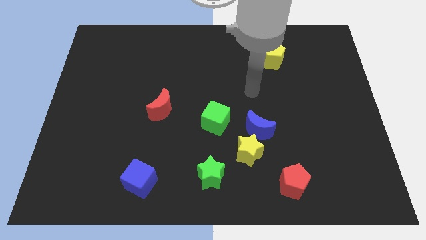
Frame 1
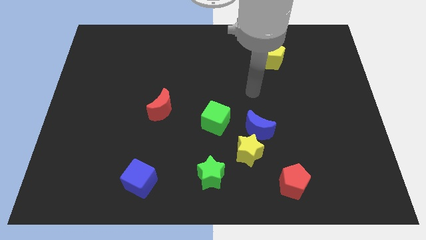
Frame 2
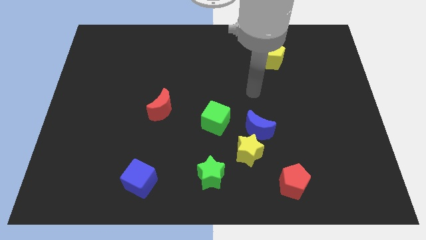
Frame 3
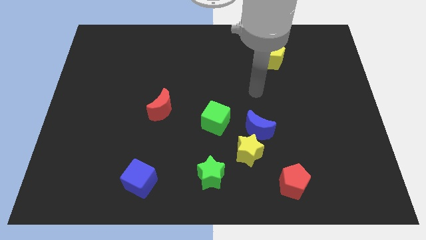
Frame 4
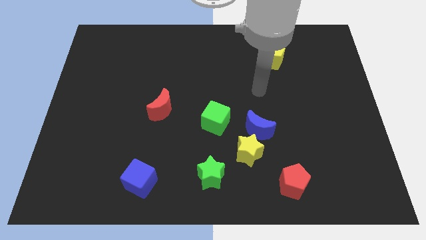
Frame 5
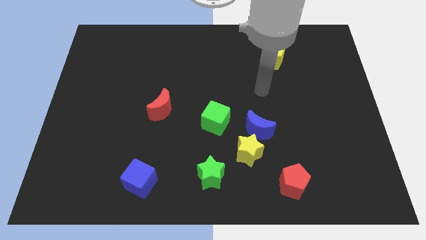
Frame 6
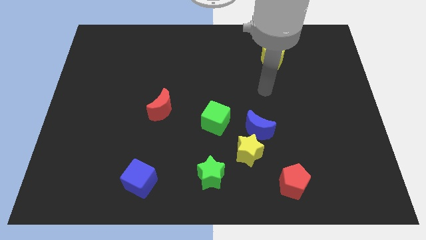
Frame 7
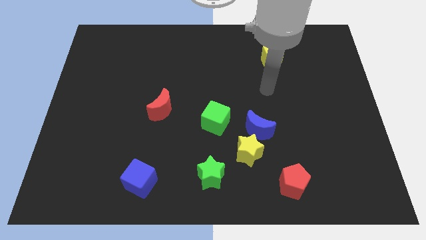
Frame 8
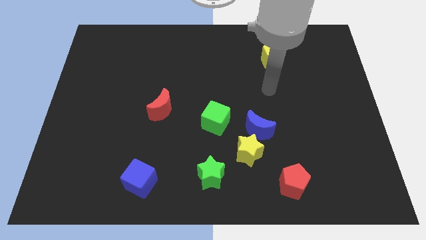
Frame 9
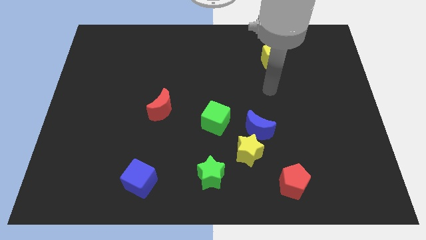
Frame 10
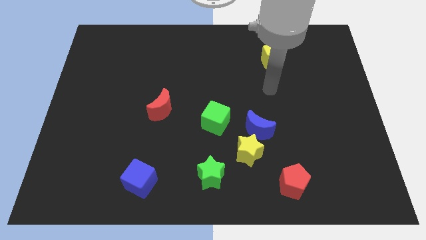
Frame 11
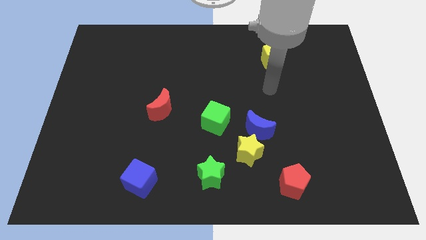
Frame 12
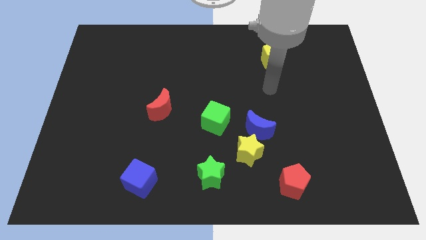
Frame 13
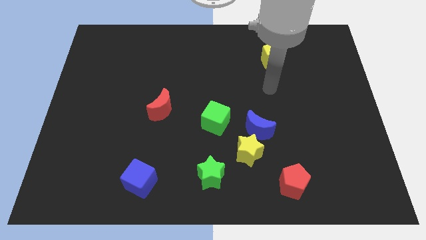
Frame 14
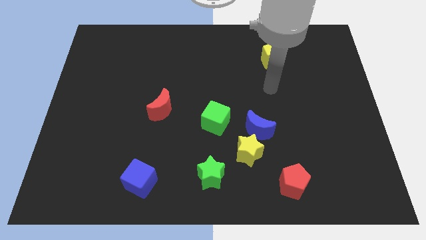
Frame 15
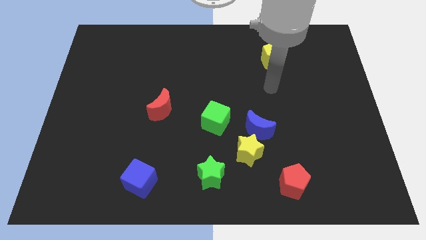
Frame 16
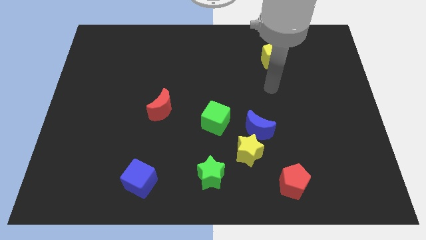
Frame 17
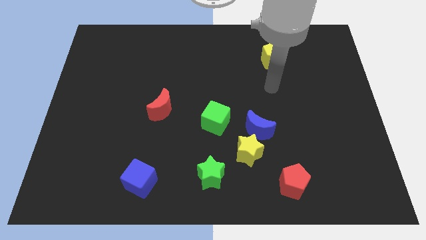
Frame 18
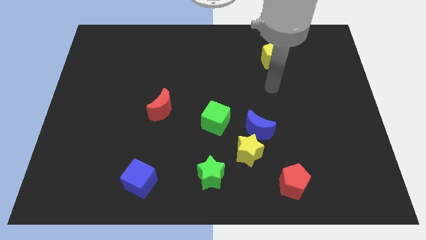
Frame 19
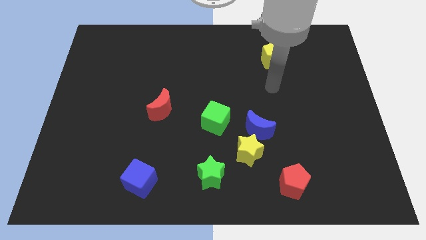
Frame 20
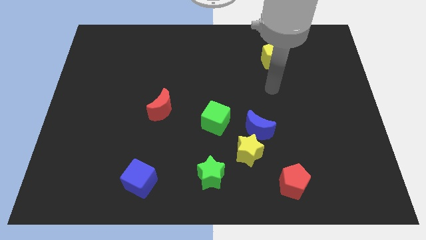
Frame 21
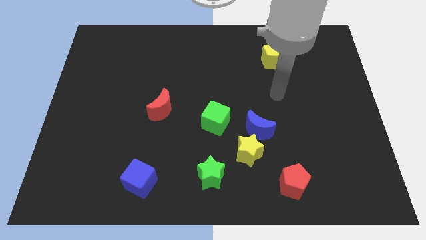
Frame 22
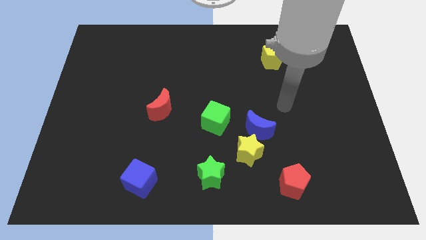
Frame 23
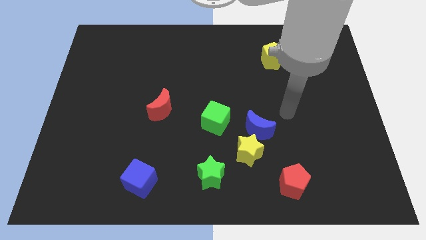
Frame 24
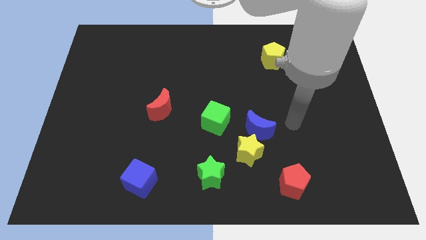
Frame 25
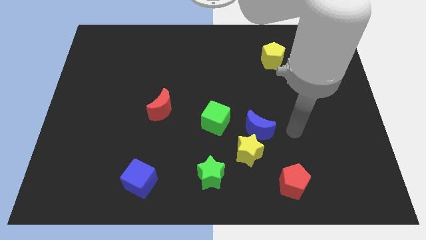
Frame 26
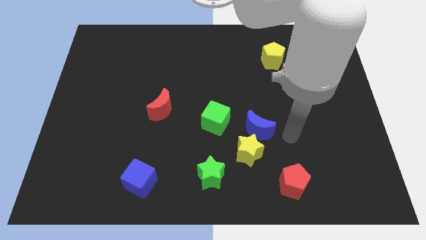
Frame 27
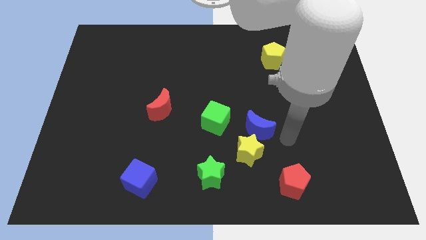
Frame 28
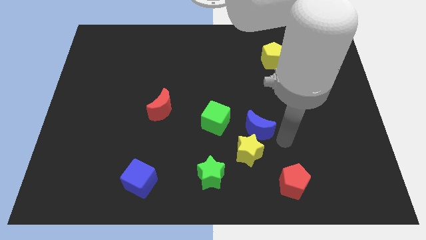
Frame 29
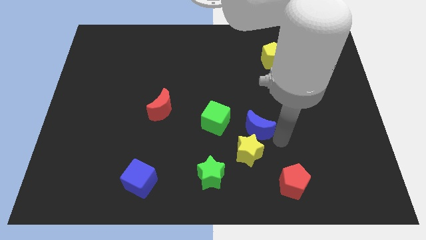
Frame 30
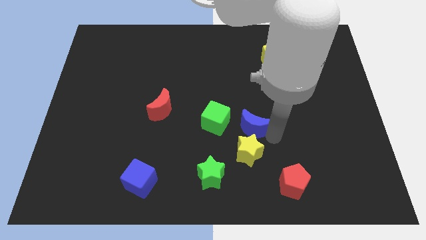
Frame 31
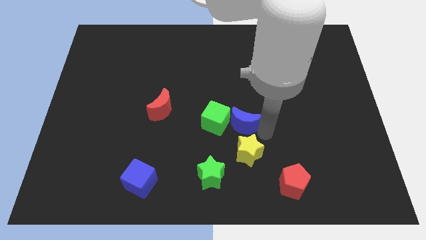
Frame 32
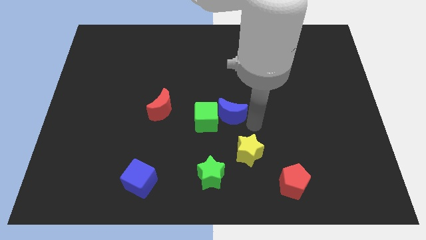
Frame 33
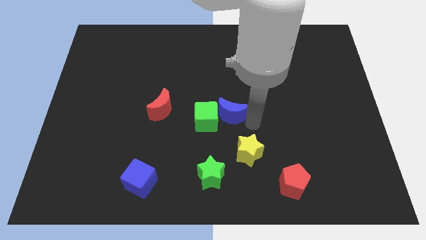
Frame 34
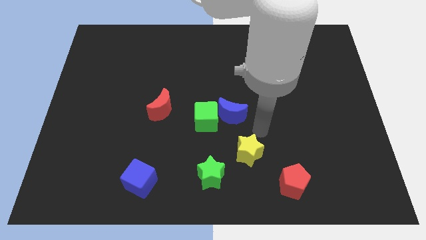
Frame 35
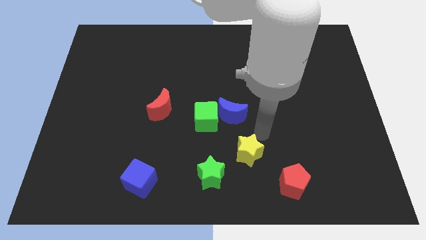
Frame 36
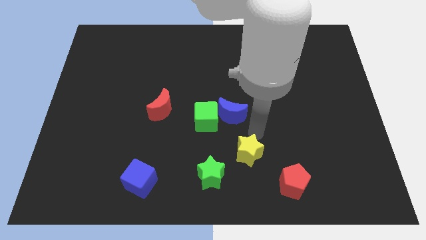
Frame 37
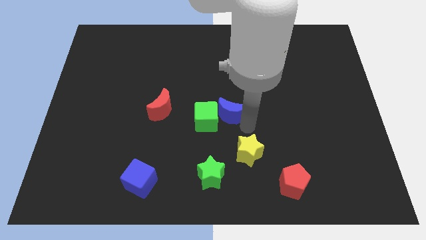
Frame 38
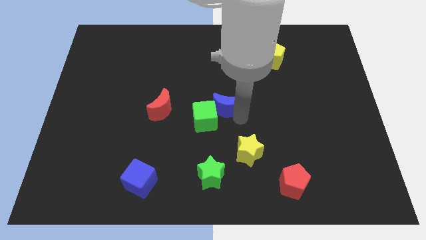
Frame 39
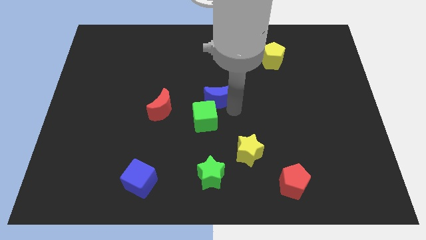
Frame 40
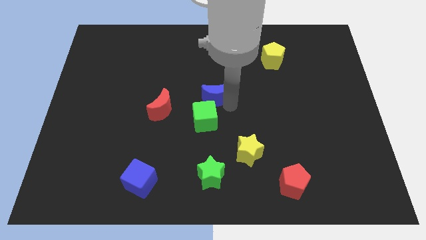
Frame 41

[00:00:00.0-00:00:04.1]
place the blue crescent to the top right of green cube

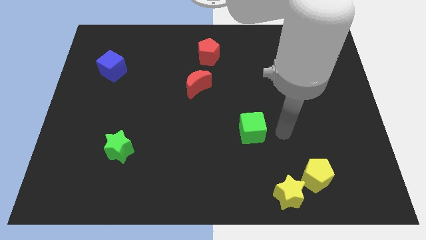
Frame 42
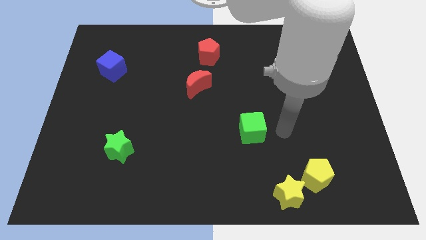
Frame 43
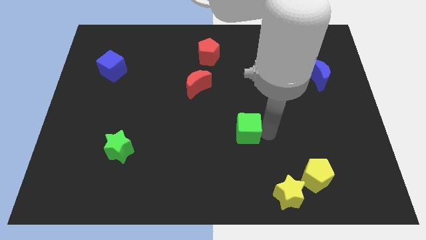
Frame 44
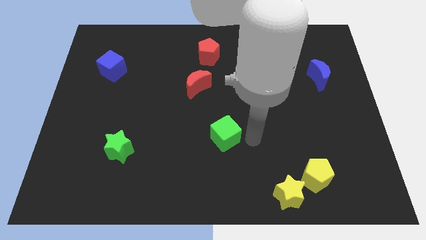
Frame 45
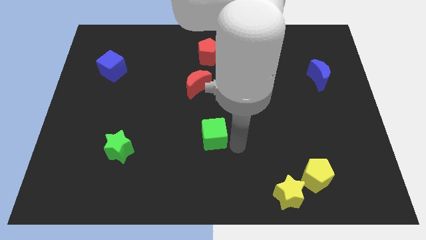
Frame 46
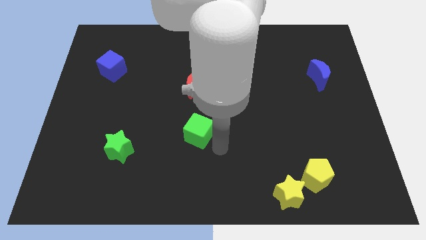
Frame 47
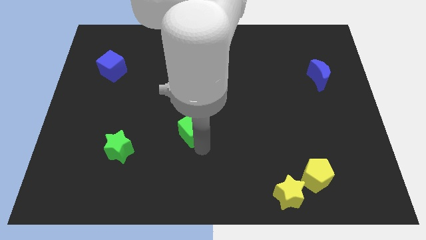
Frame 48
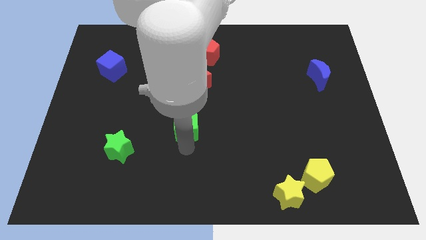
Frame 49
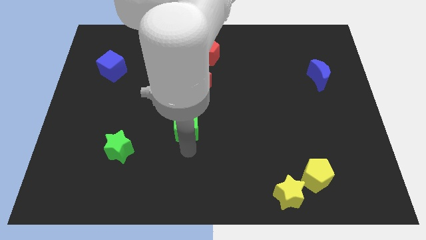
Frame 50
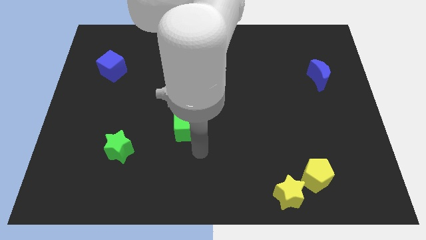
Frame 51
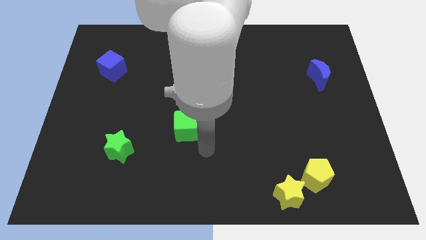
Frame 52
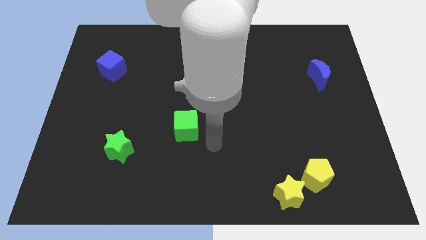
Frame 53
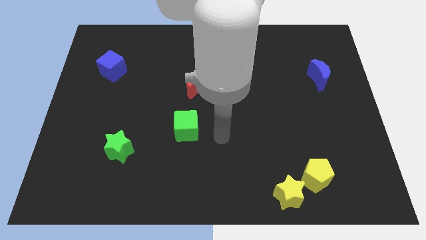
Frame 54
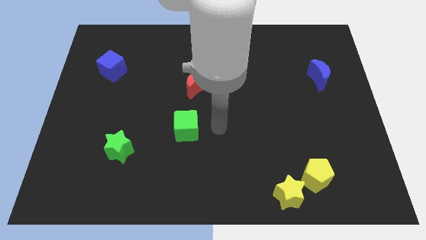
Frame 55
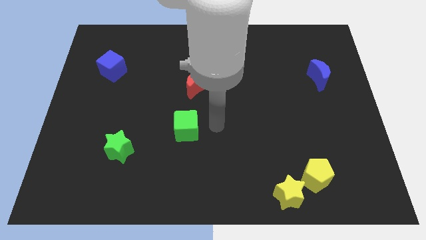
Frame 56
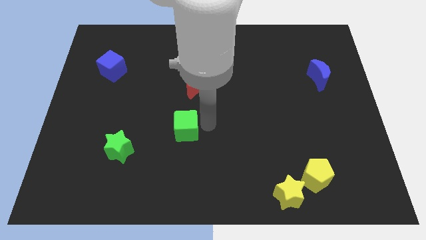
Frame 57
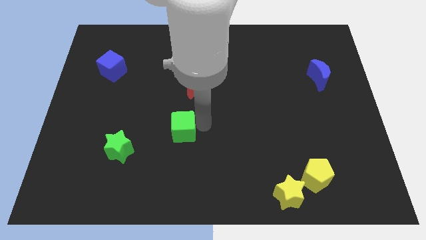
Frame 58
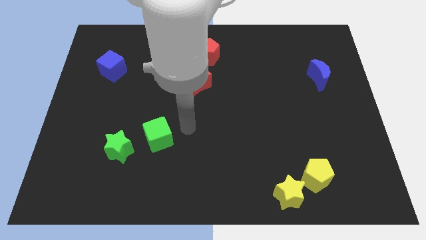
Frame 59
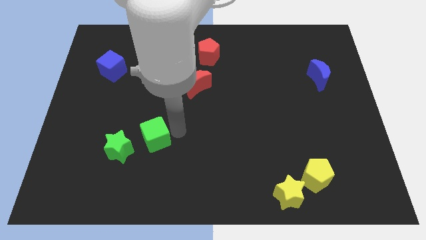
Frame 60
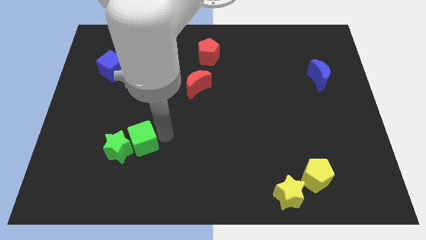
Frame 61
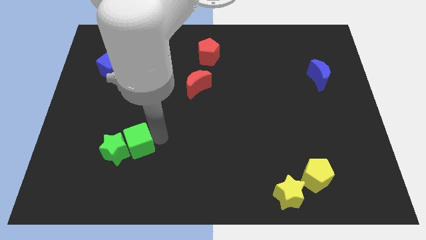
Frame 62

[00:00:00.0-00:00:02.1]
push green cube into green star

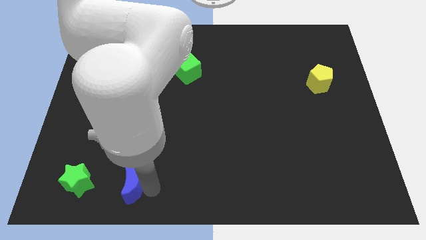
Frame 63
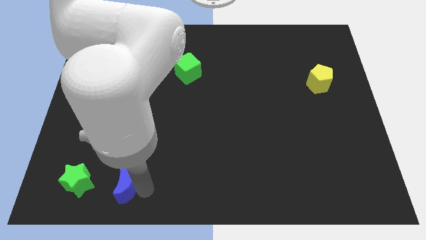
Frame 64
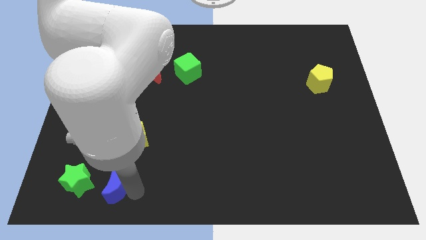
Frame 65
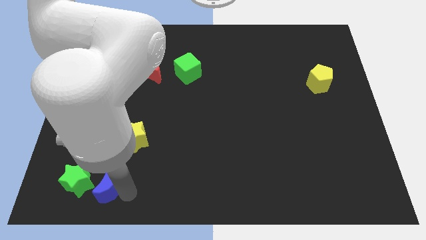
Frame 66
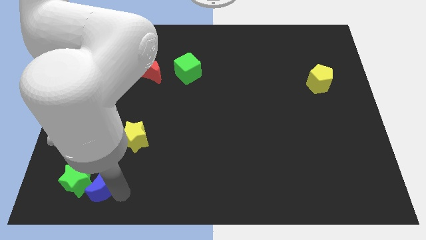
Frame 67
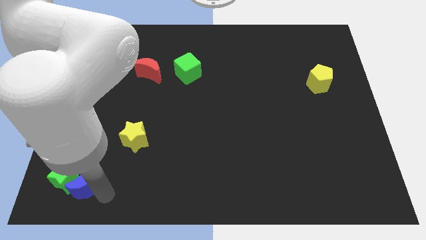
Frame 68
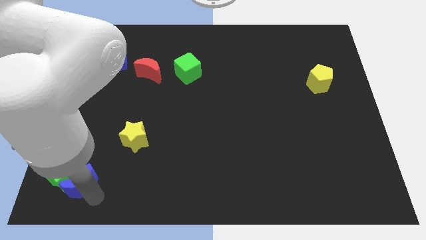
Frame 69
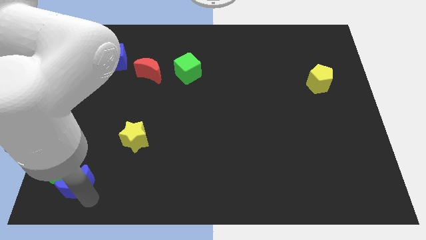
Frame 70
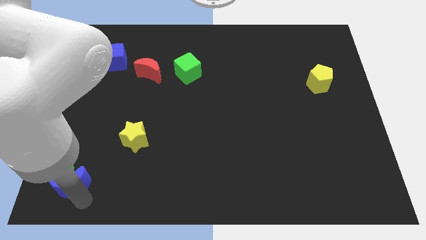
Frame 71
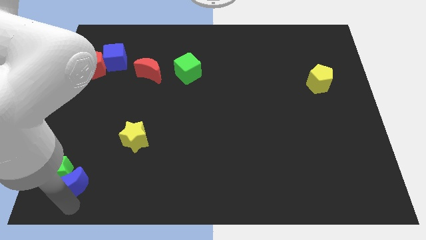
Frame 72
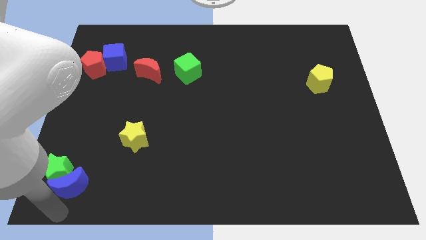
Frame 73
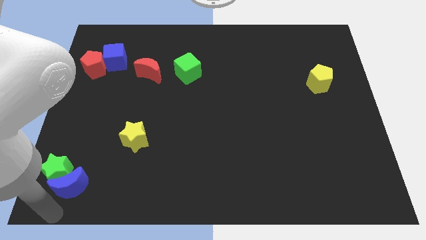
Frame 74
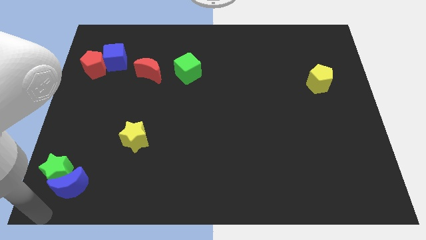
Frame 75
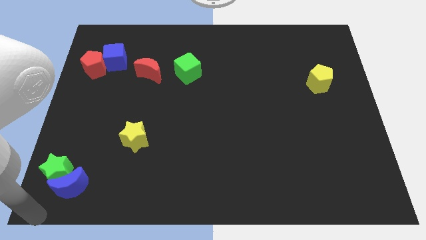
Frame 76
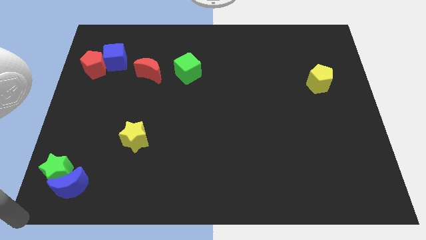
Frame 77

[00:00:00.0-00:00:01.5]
push blue moon into the green star

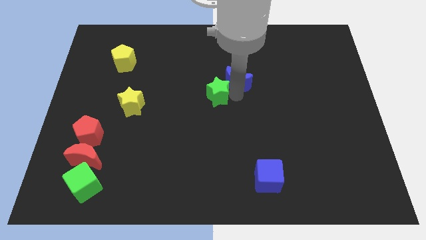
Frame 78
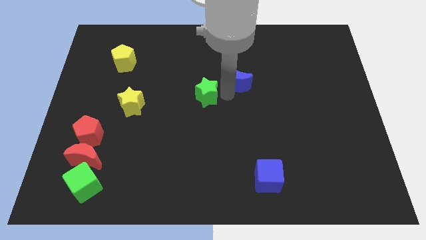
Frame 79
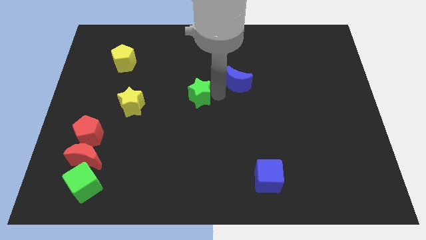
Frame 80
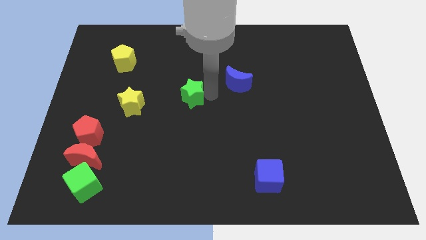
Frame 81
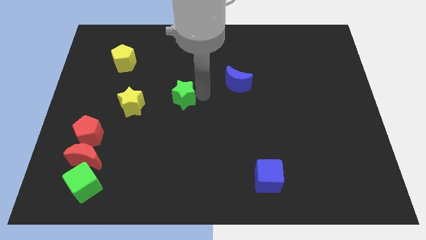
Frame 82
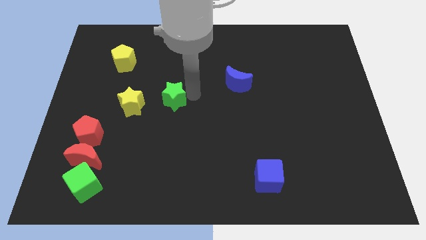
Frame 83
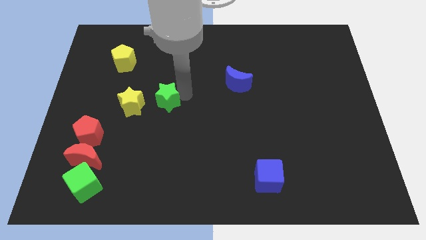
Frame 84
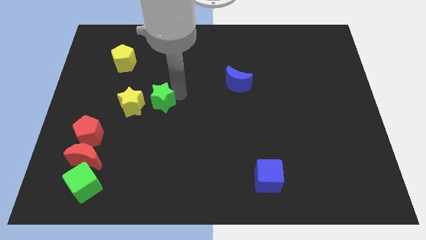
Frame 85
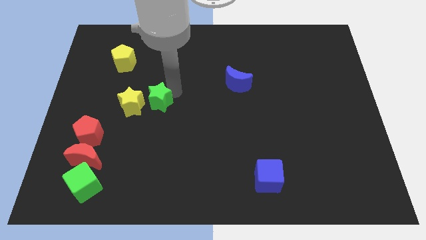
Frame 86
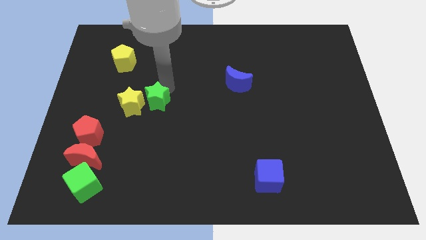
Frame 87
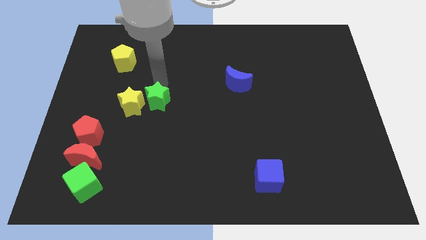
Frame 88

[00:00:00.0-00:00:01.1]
separate the green star from the blue crescent

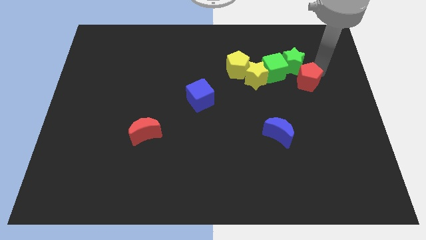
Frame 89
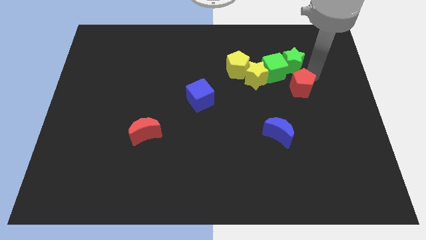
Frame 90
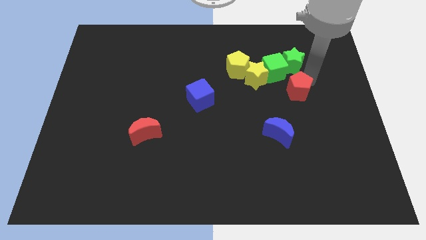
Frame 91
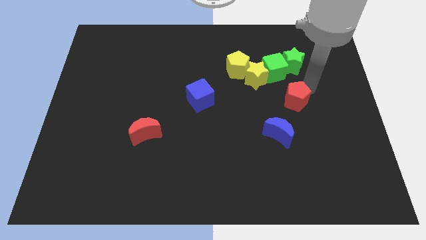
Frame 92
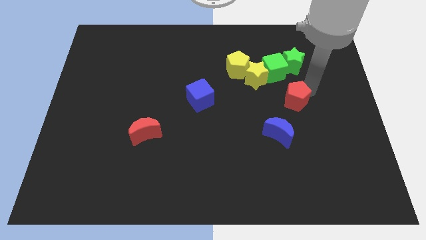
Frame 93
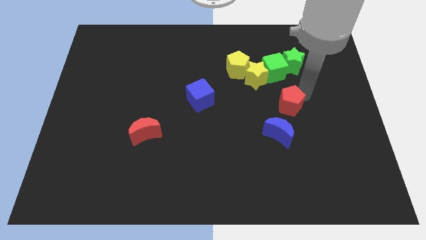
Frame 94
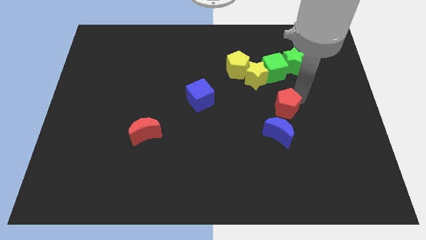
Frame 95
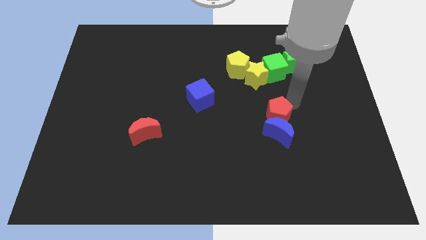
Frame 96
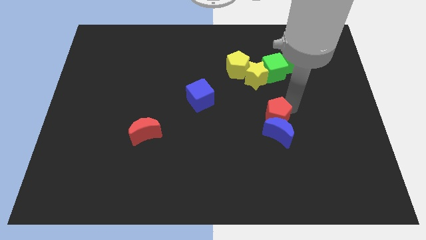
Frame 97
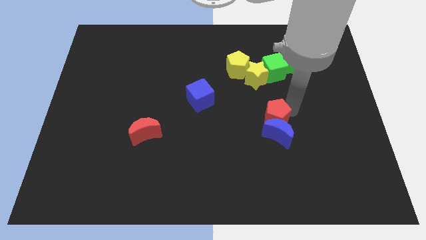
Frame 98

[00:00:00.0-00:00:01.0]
separate red pentagon from green star
